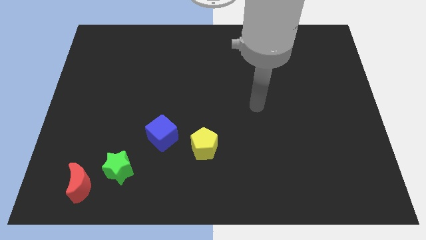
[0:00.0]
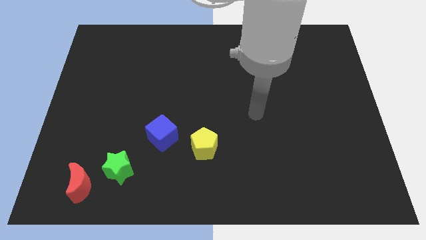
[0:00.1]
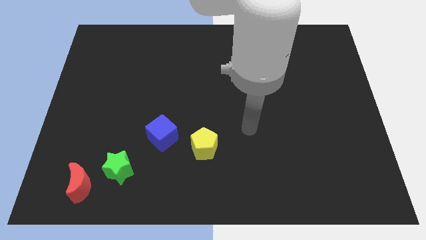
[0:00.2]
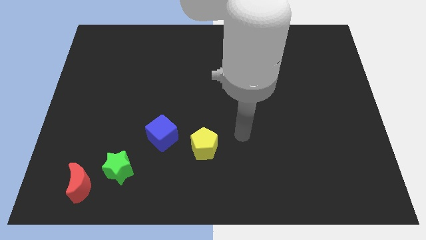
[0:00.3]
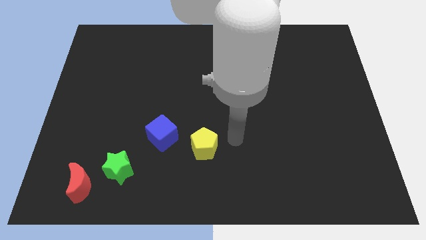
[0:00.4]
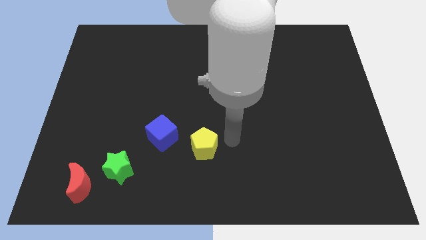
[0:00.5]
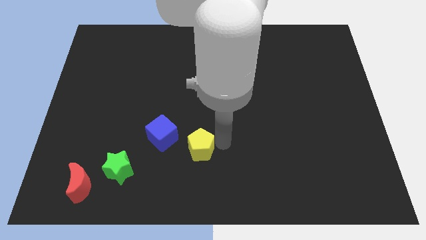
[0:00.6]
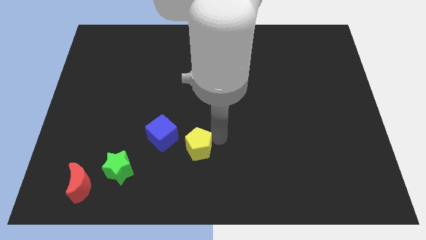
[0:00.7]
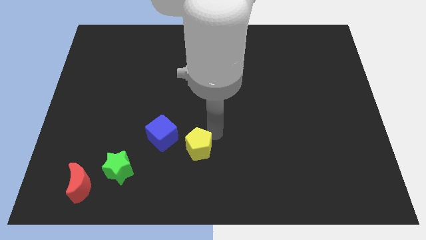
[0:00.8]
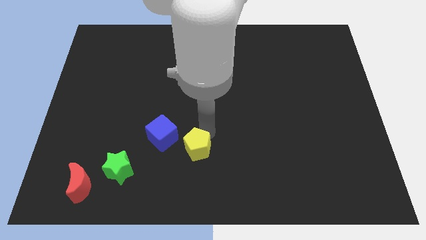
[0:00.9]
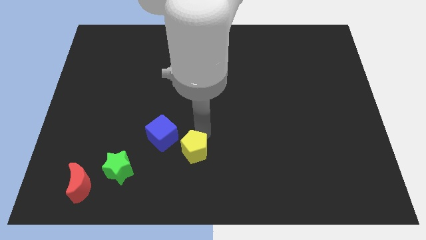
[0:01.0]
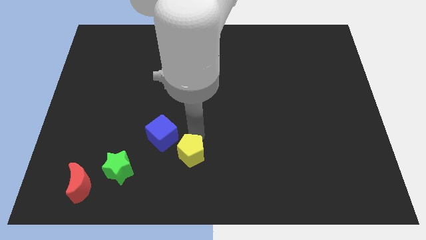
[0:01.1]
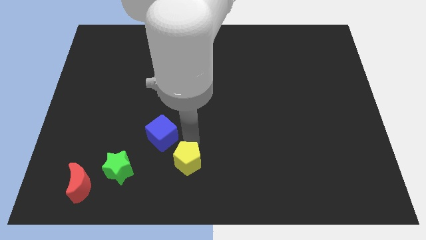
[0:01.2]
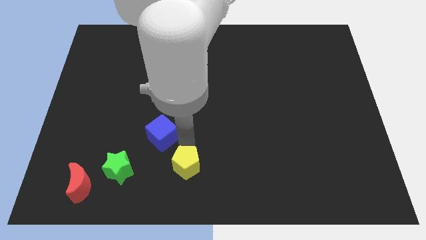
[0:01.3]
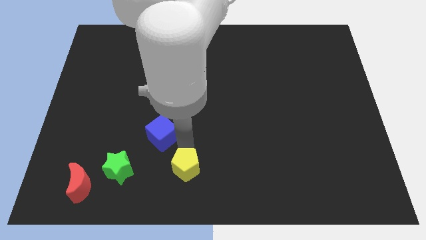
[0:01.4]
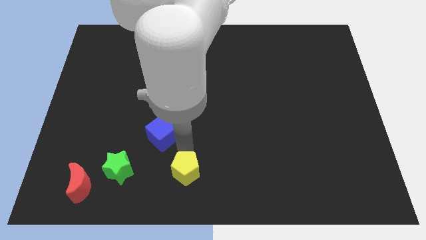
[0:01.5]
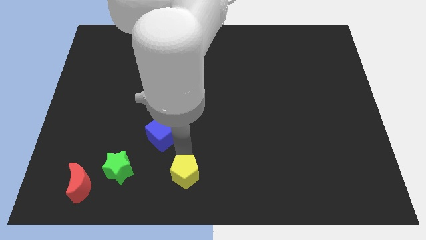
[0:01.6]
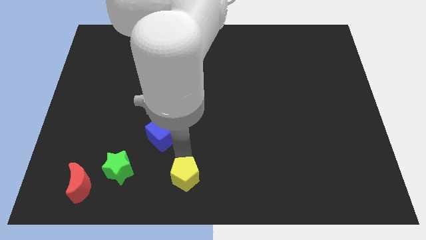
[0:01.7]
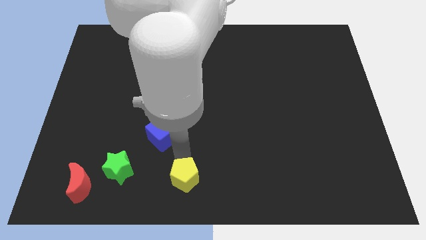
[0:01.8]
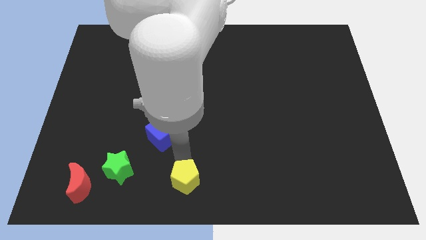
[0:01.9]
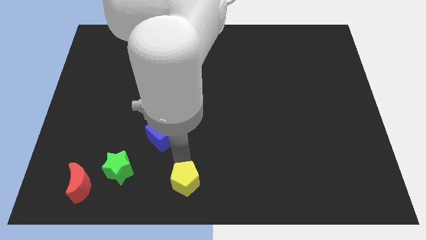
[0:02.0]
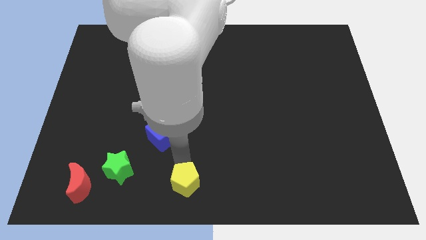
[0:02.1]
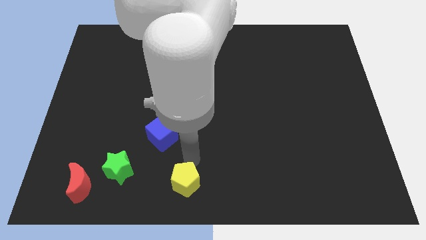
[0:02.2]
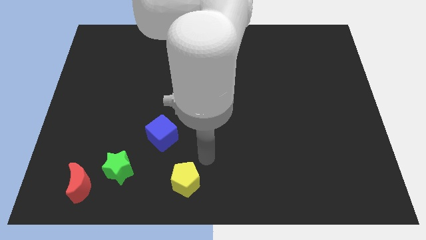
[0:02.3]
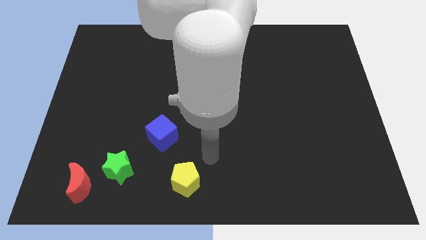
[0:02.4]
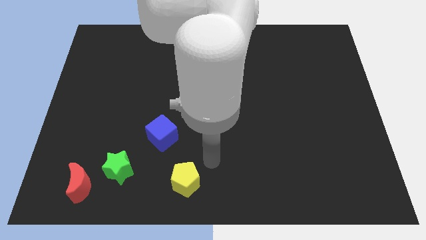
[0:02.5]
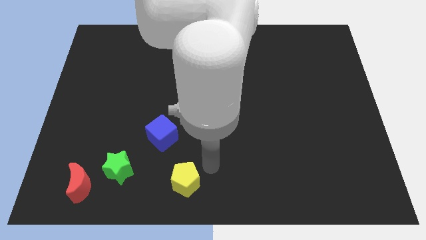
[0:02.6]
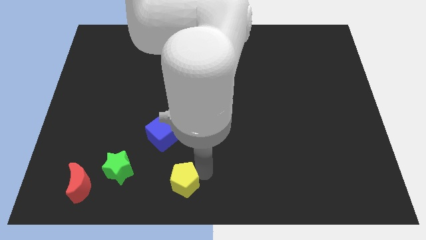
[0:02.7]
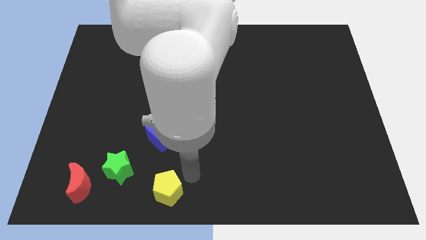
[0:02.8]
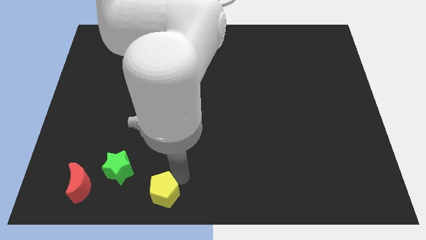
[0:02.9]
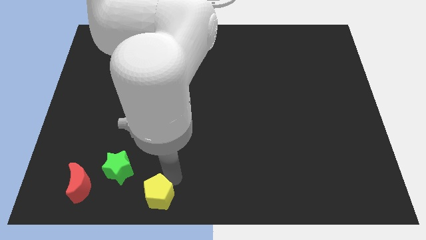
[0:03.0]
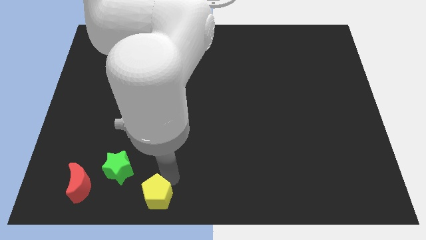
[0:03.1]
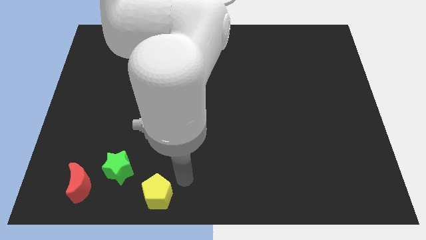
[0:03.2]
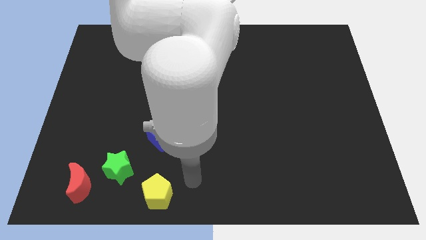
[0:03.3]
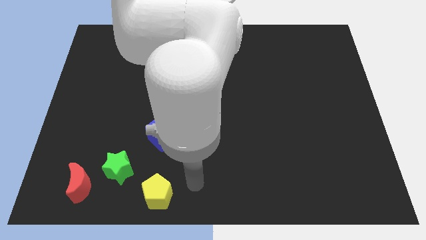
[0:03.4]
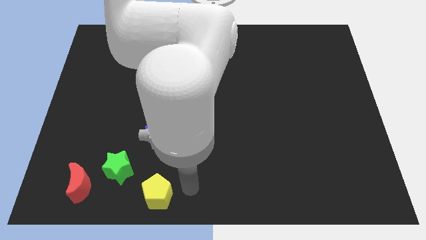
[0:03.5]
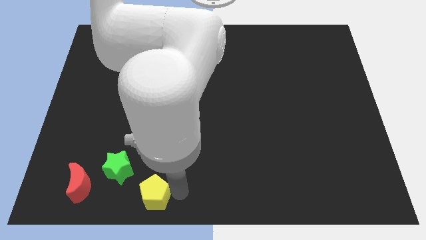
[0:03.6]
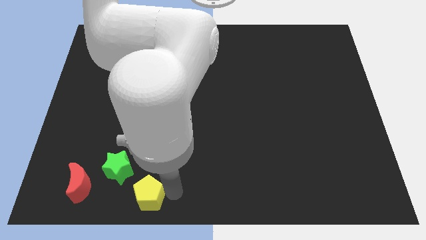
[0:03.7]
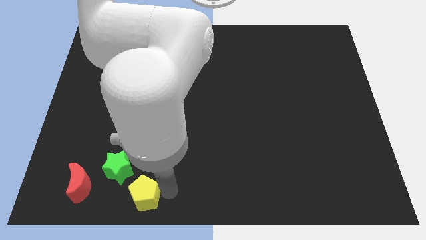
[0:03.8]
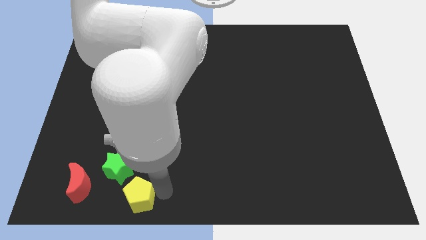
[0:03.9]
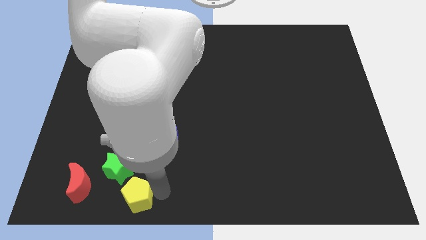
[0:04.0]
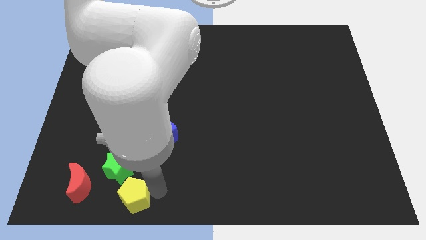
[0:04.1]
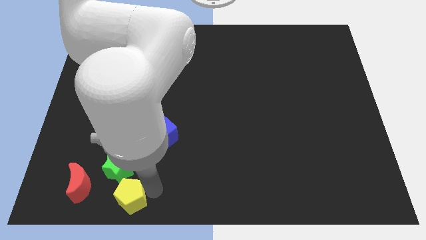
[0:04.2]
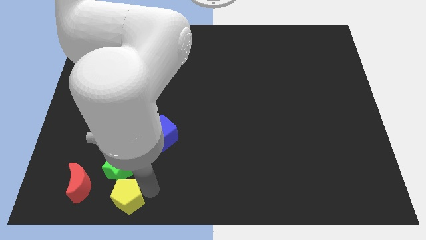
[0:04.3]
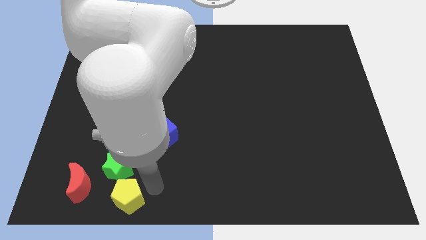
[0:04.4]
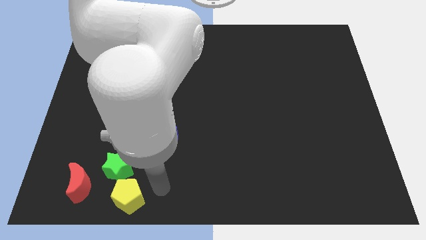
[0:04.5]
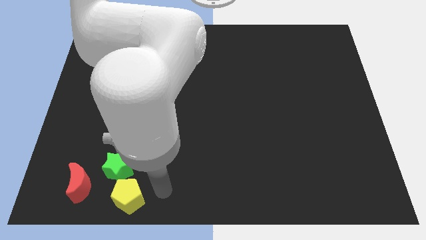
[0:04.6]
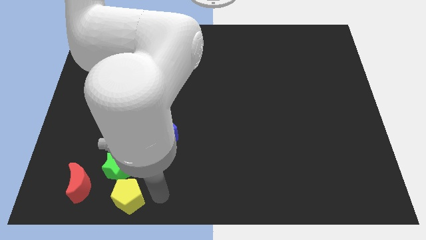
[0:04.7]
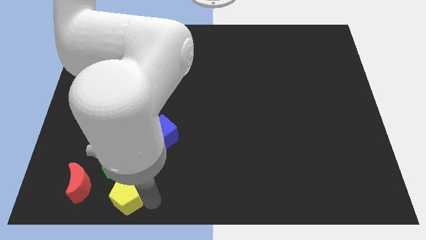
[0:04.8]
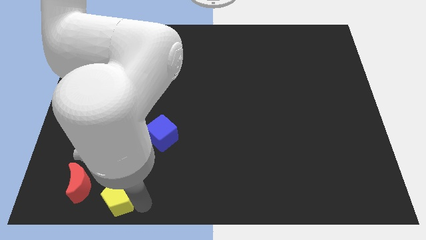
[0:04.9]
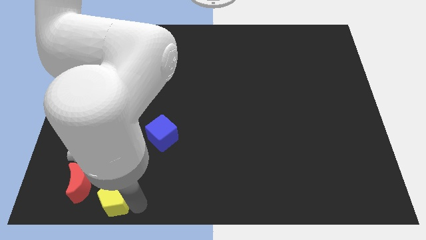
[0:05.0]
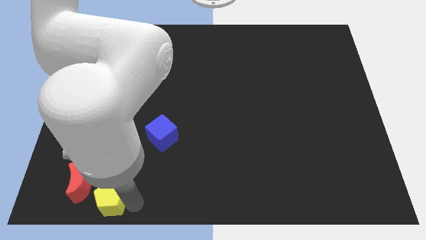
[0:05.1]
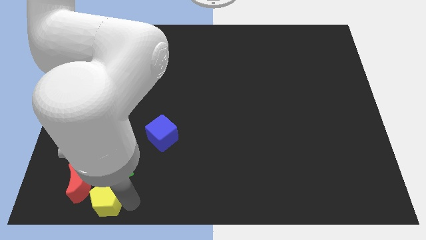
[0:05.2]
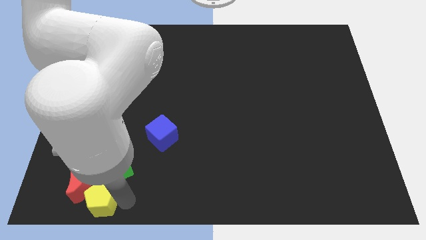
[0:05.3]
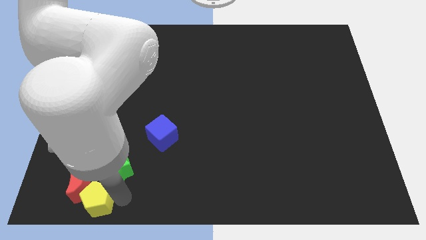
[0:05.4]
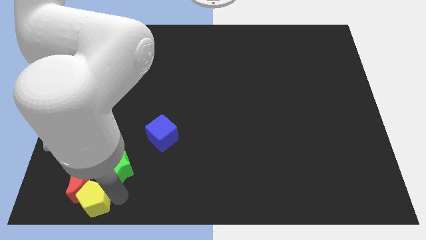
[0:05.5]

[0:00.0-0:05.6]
push the yellow pentagon to the red moon

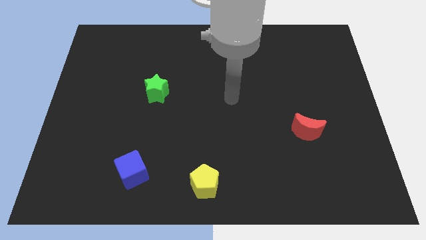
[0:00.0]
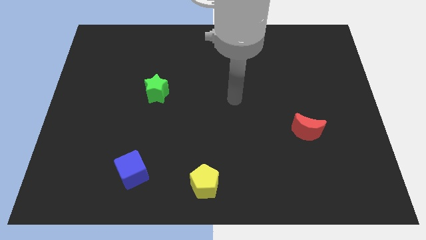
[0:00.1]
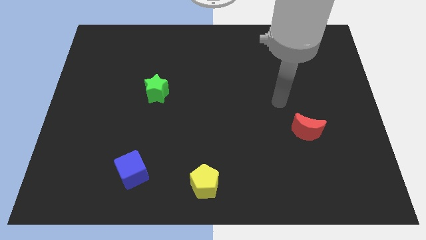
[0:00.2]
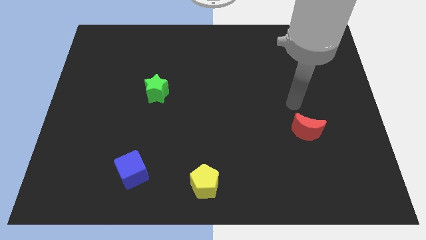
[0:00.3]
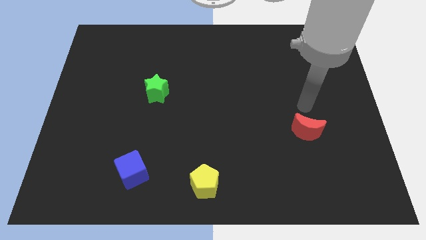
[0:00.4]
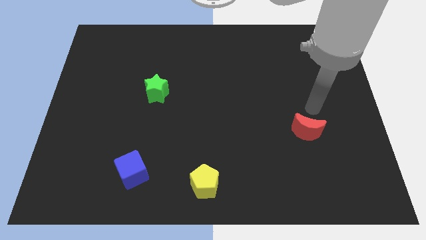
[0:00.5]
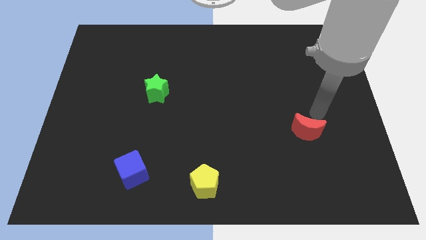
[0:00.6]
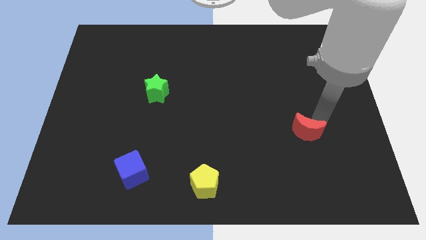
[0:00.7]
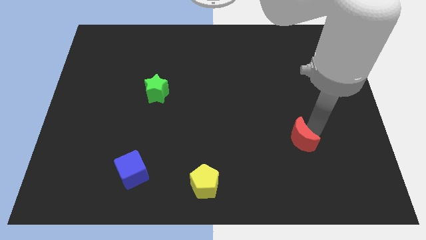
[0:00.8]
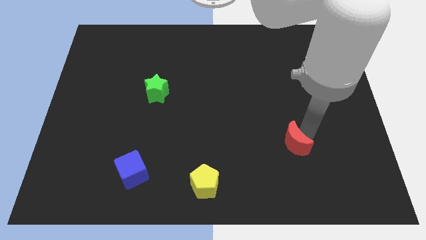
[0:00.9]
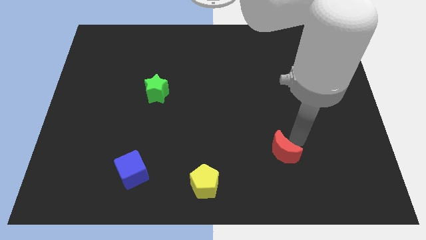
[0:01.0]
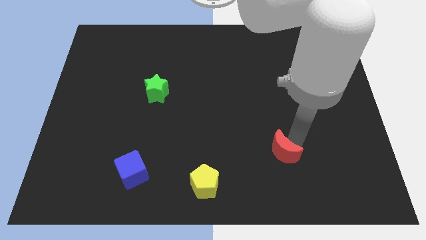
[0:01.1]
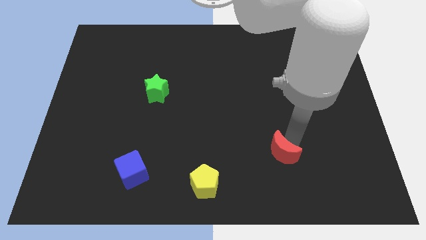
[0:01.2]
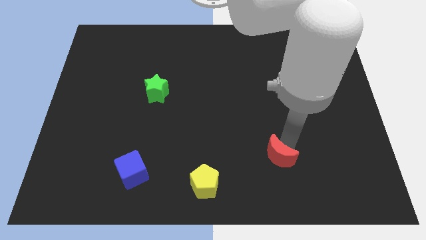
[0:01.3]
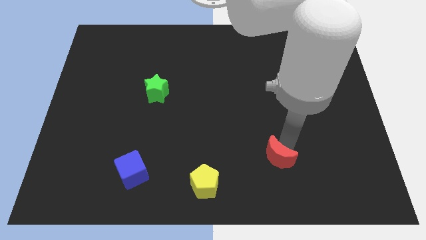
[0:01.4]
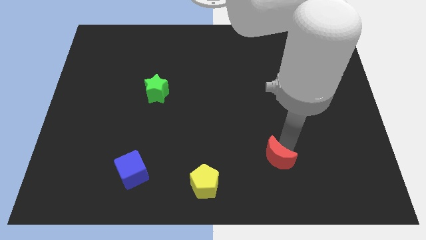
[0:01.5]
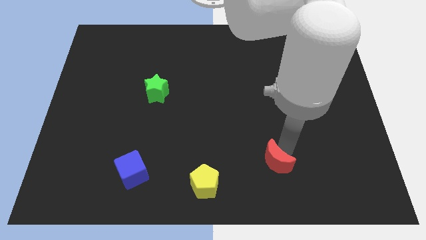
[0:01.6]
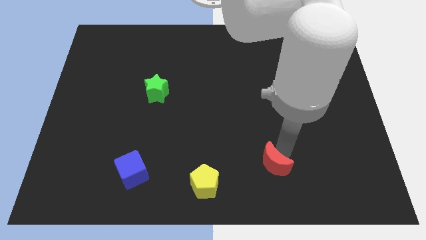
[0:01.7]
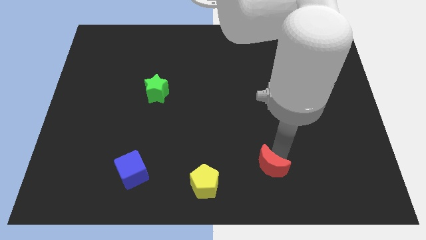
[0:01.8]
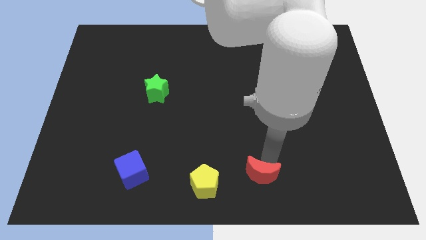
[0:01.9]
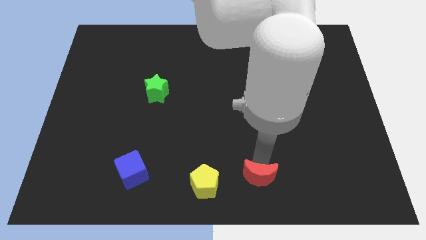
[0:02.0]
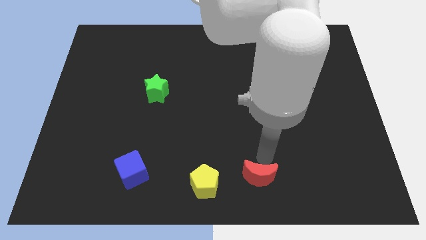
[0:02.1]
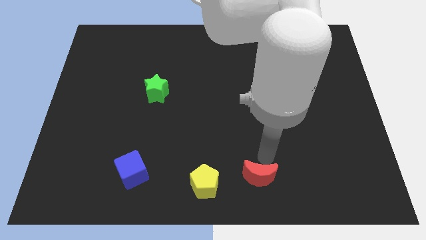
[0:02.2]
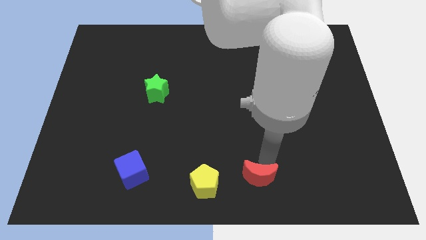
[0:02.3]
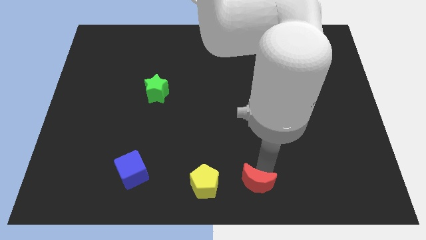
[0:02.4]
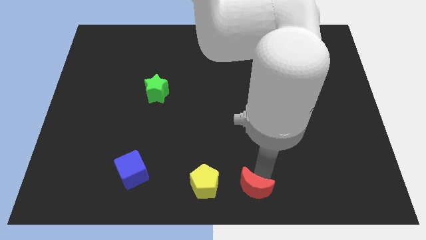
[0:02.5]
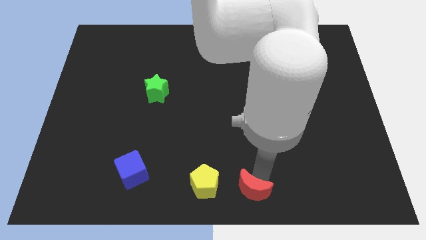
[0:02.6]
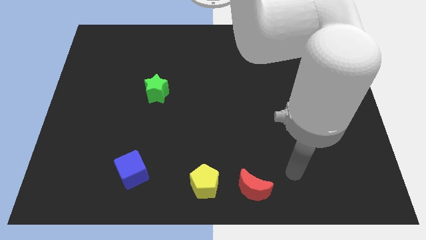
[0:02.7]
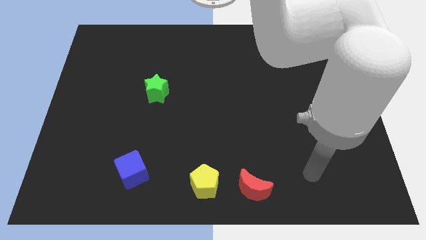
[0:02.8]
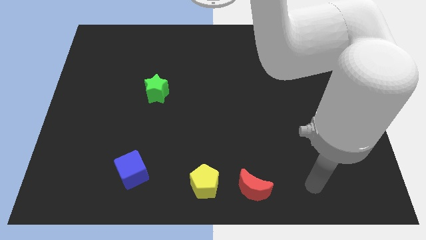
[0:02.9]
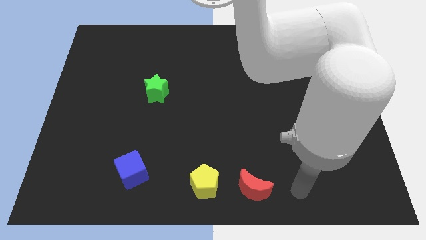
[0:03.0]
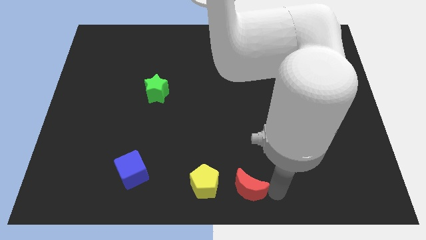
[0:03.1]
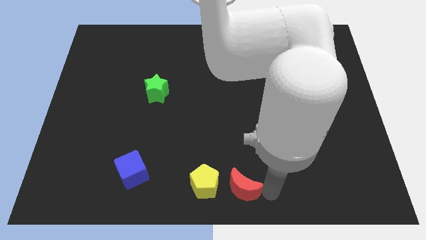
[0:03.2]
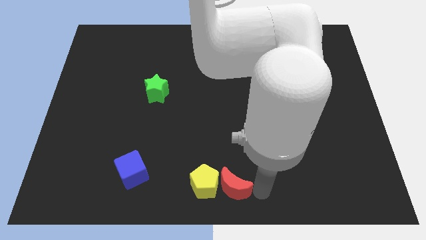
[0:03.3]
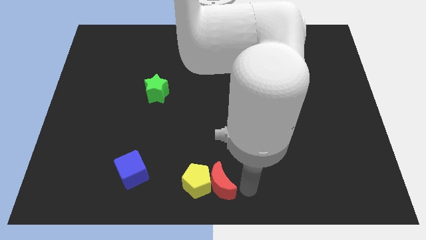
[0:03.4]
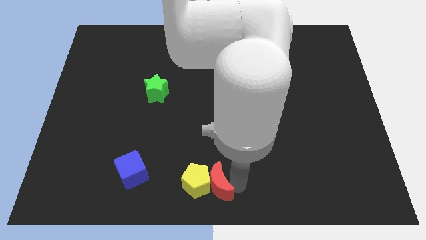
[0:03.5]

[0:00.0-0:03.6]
push the red block towards the pentagon
